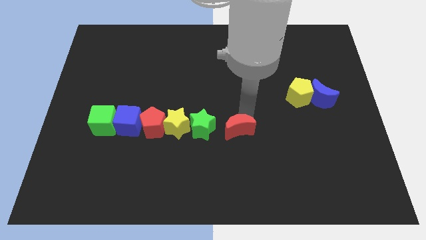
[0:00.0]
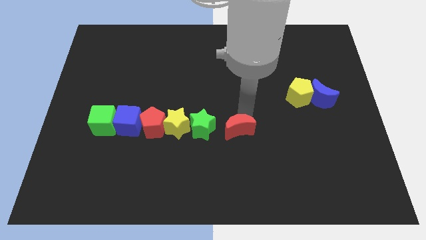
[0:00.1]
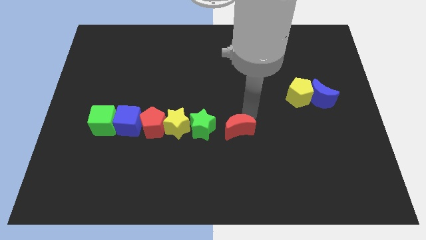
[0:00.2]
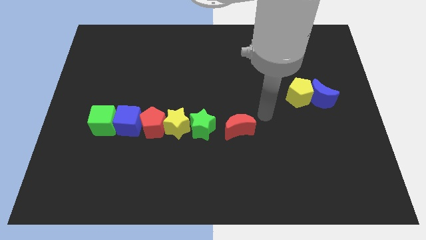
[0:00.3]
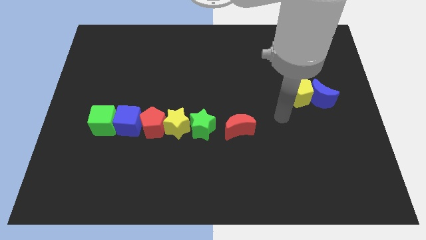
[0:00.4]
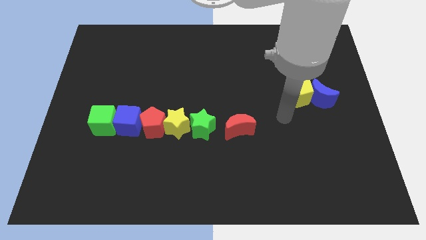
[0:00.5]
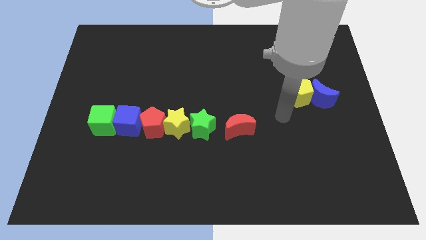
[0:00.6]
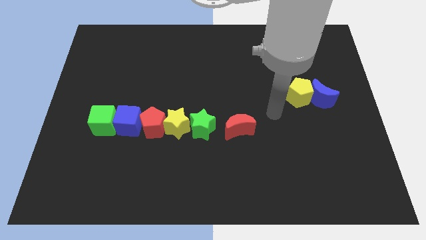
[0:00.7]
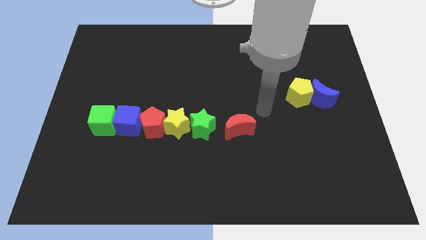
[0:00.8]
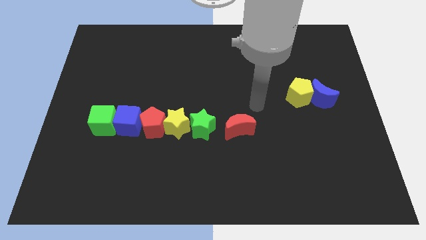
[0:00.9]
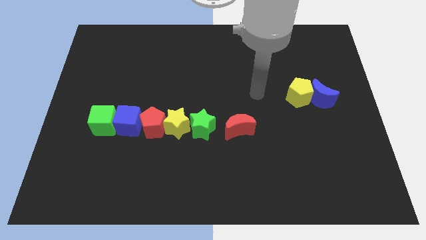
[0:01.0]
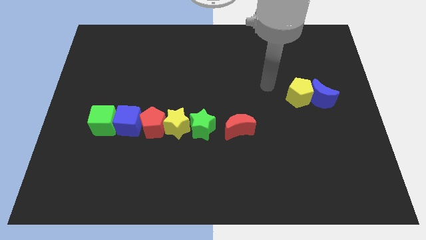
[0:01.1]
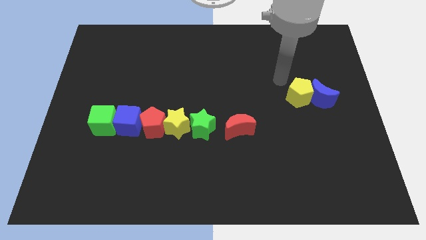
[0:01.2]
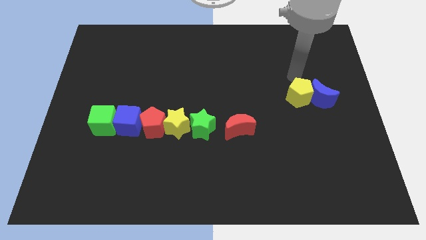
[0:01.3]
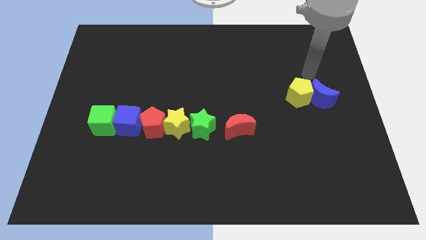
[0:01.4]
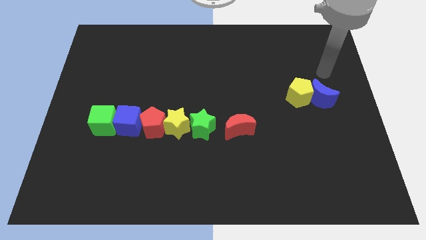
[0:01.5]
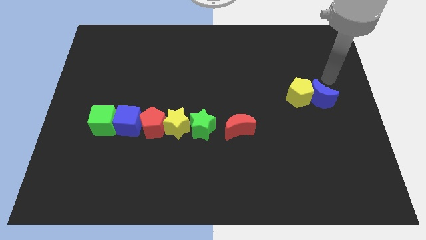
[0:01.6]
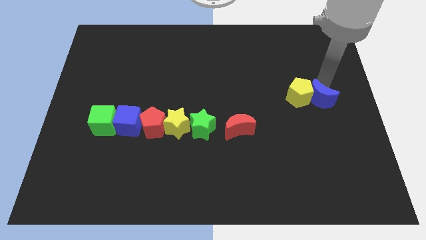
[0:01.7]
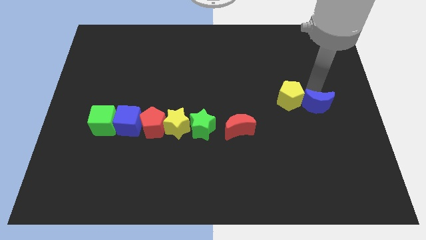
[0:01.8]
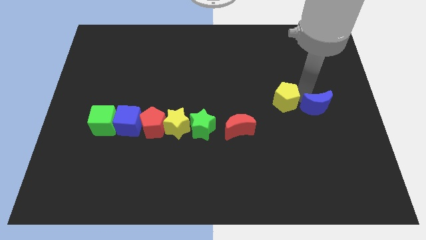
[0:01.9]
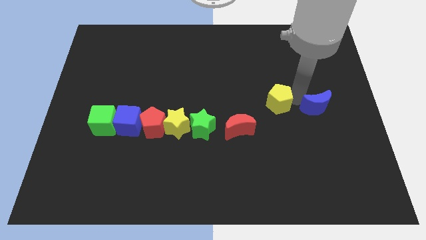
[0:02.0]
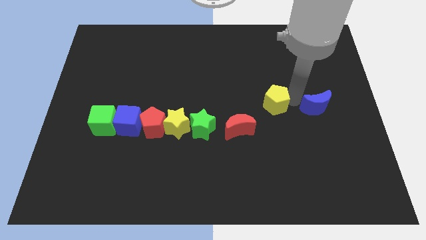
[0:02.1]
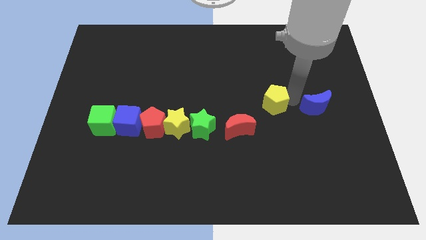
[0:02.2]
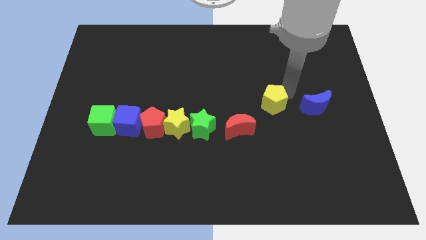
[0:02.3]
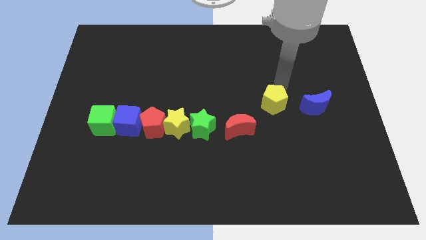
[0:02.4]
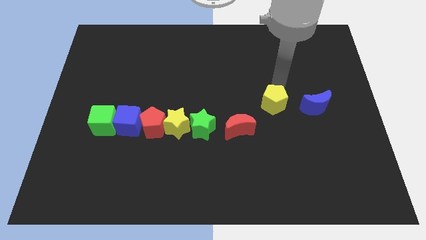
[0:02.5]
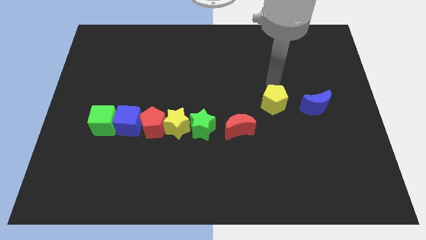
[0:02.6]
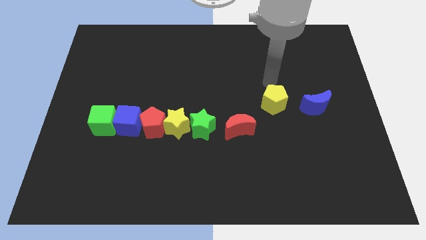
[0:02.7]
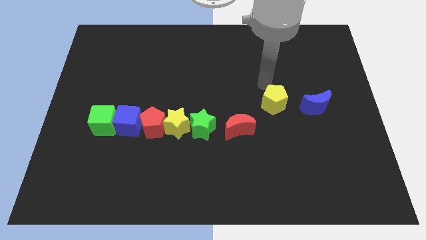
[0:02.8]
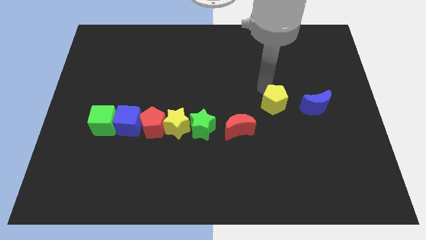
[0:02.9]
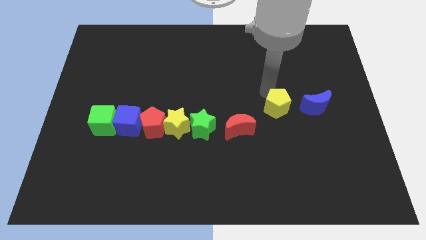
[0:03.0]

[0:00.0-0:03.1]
separate the yellow pentagon from the blue crescent

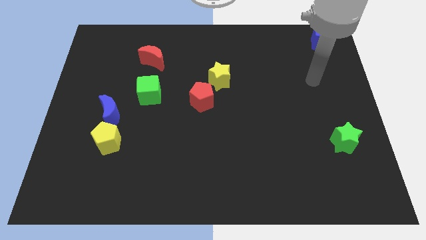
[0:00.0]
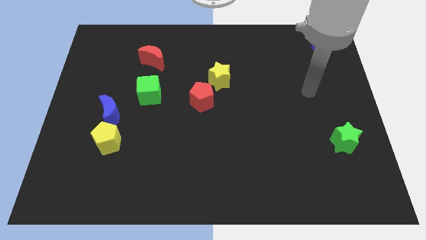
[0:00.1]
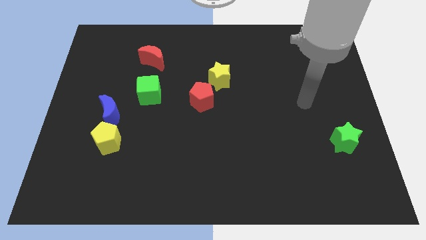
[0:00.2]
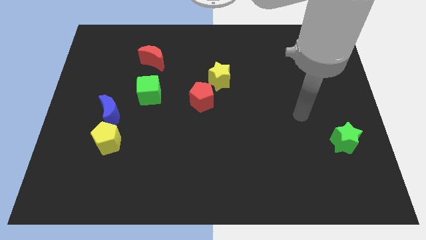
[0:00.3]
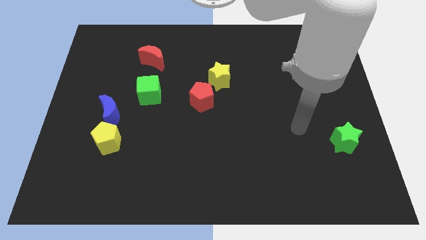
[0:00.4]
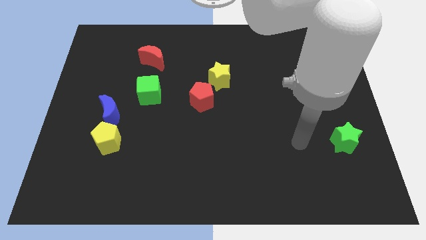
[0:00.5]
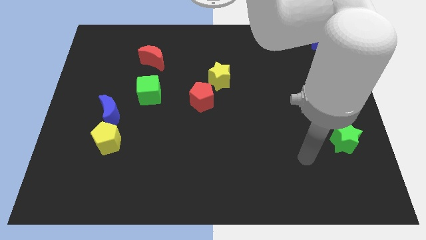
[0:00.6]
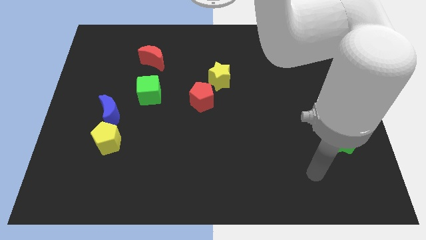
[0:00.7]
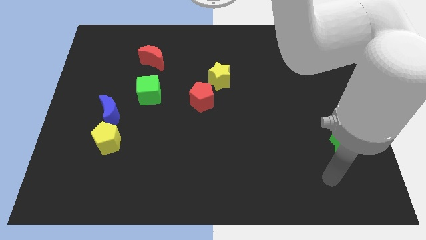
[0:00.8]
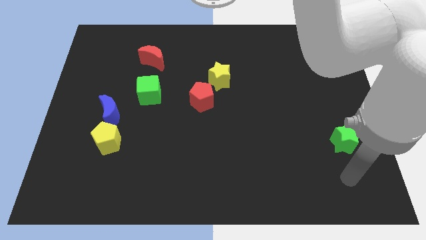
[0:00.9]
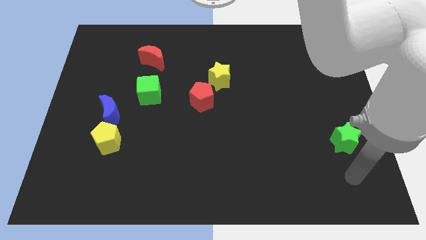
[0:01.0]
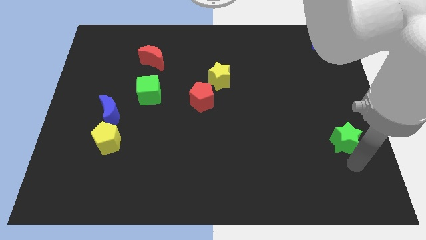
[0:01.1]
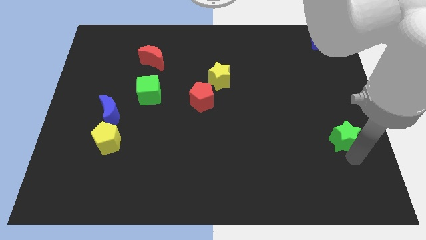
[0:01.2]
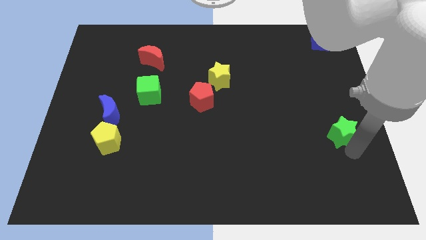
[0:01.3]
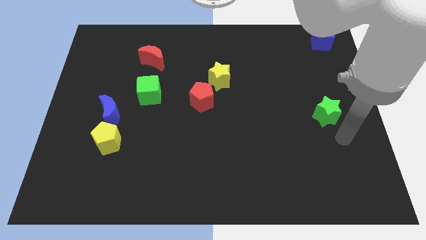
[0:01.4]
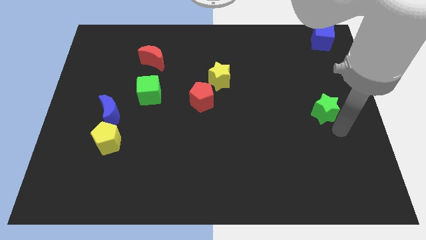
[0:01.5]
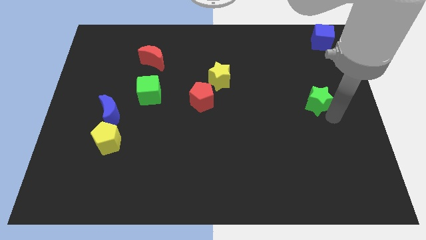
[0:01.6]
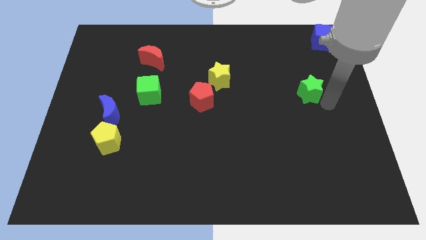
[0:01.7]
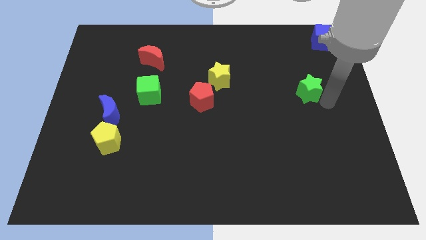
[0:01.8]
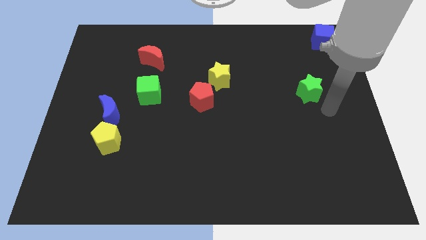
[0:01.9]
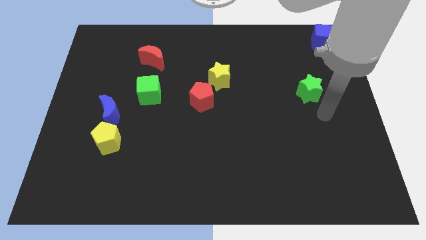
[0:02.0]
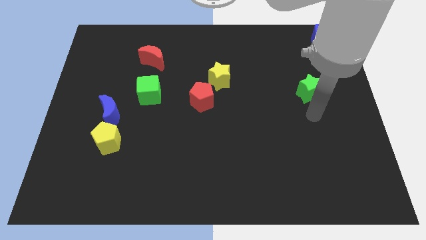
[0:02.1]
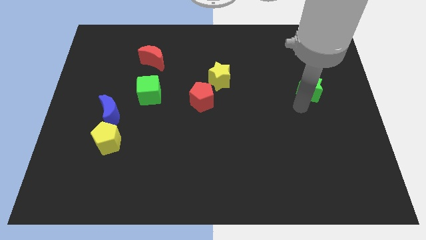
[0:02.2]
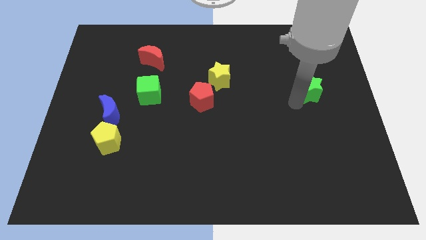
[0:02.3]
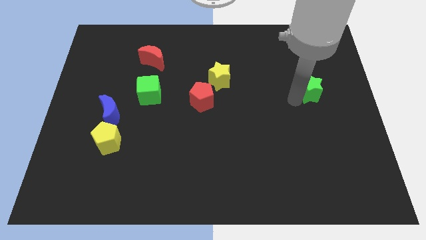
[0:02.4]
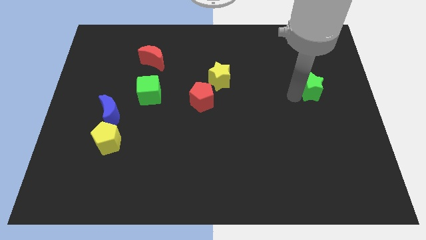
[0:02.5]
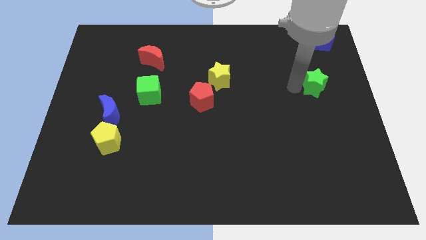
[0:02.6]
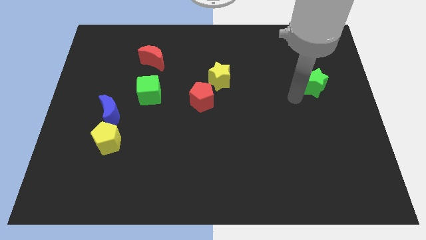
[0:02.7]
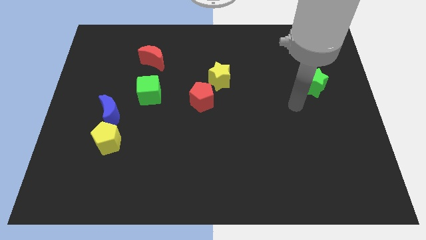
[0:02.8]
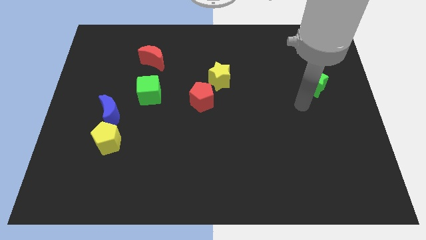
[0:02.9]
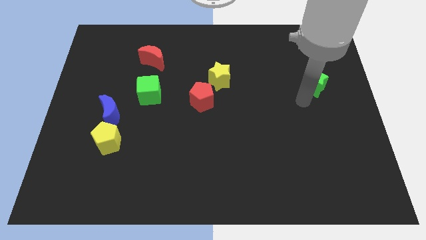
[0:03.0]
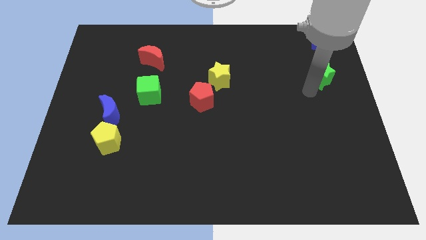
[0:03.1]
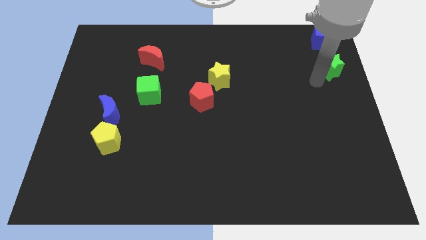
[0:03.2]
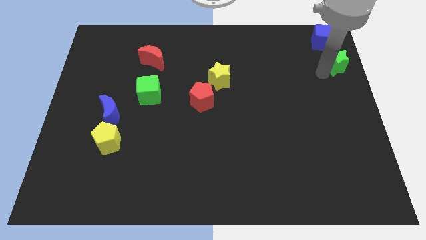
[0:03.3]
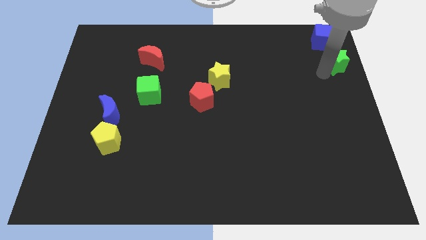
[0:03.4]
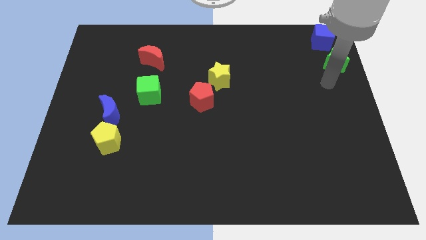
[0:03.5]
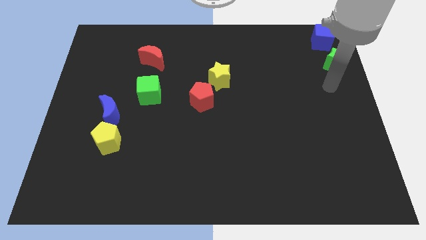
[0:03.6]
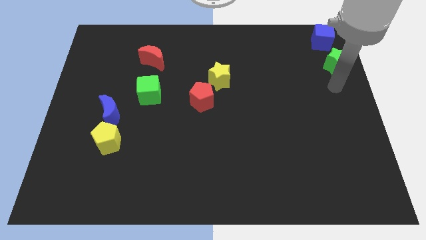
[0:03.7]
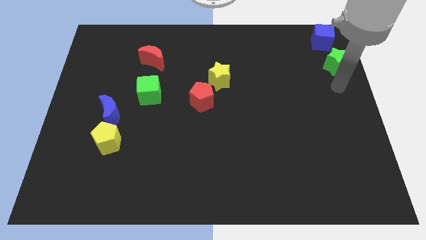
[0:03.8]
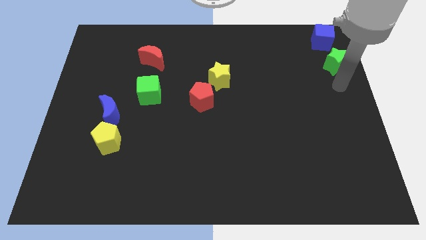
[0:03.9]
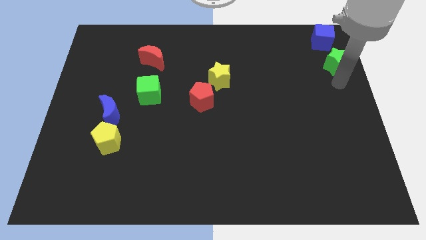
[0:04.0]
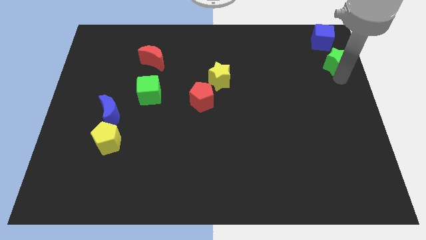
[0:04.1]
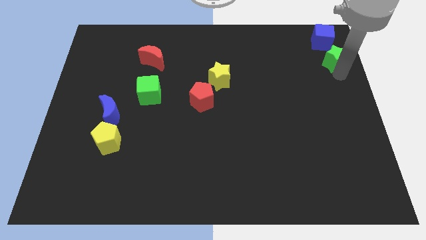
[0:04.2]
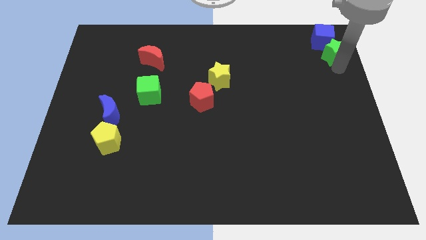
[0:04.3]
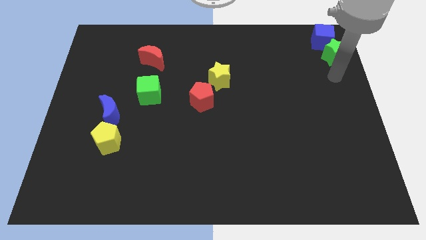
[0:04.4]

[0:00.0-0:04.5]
move the green block towards the top side of the board

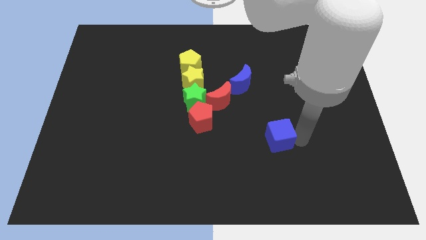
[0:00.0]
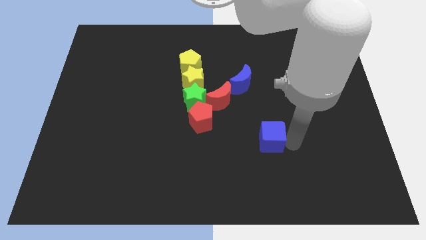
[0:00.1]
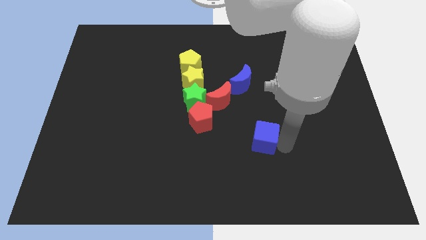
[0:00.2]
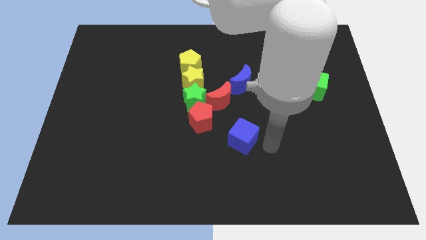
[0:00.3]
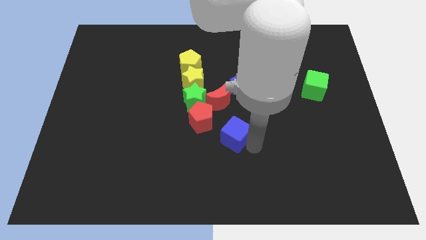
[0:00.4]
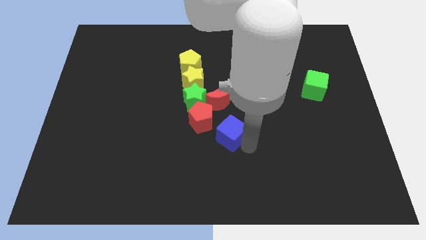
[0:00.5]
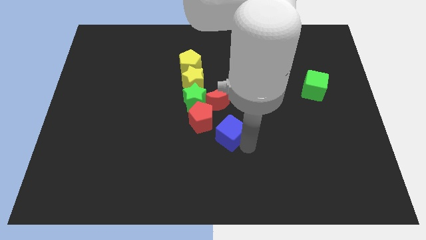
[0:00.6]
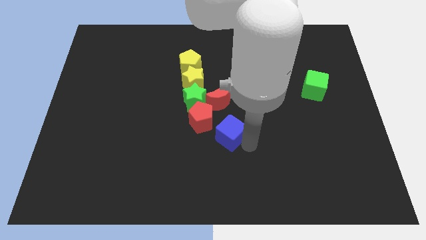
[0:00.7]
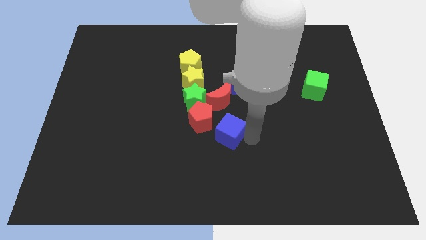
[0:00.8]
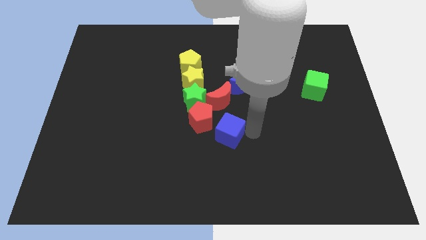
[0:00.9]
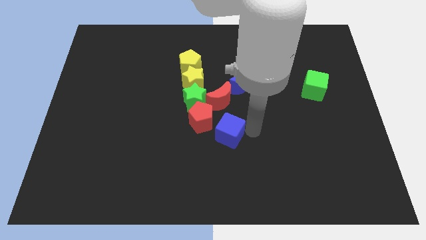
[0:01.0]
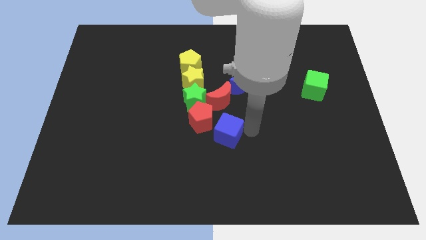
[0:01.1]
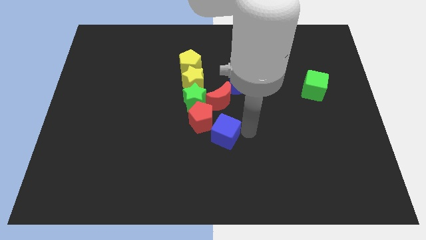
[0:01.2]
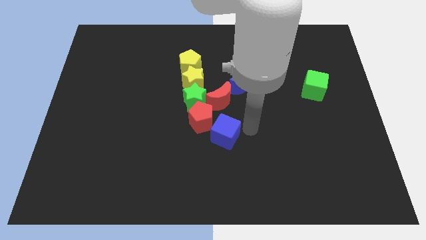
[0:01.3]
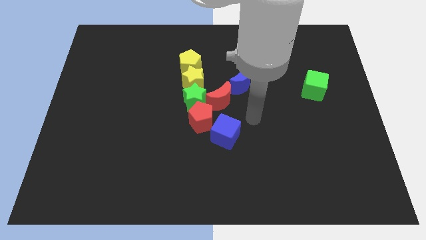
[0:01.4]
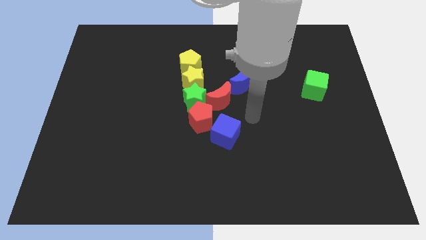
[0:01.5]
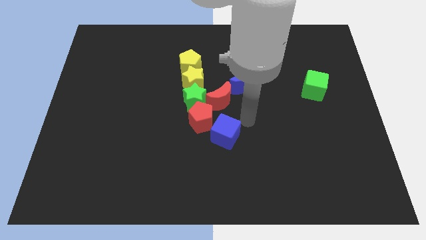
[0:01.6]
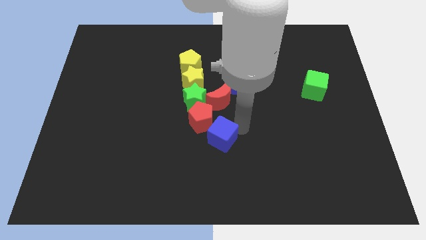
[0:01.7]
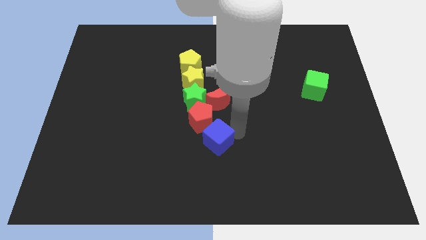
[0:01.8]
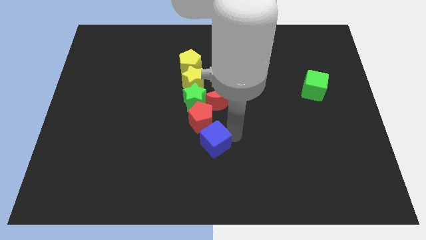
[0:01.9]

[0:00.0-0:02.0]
place the blue cube below the red pentagon
